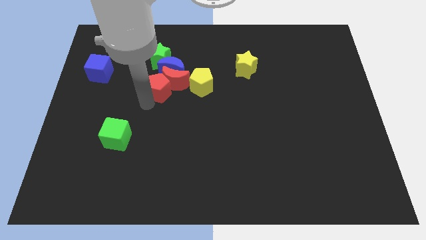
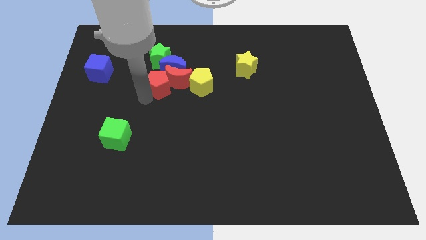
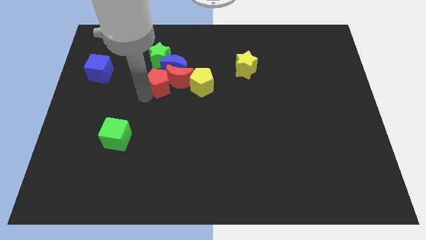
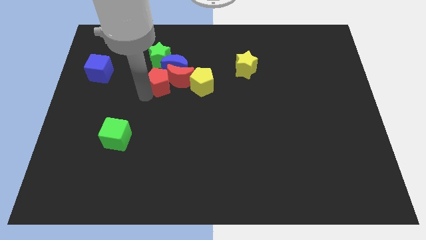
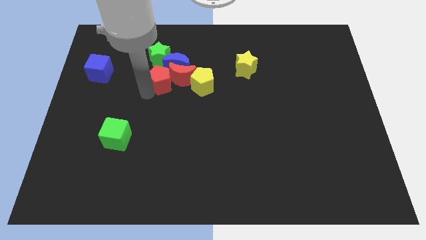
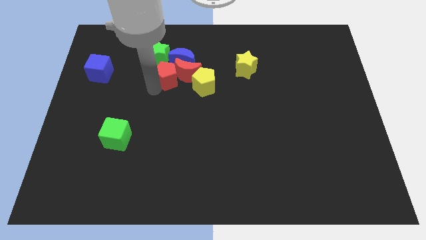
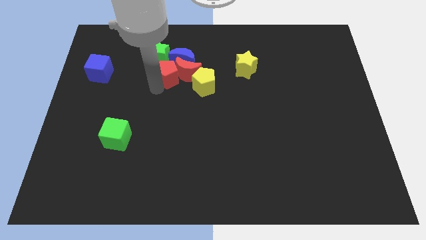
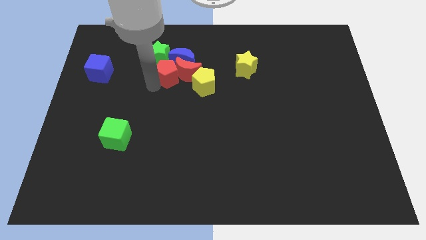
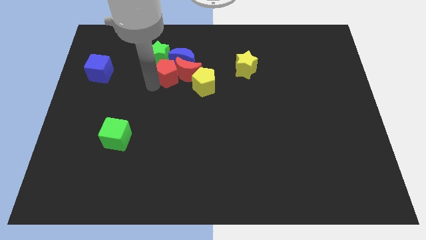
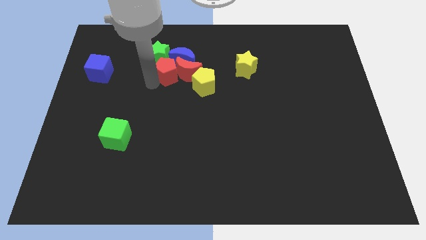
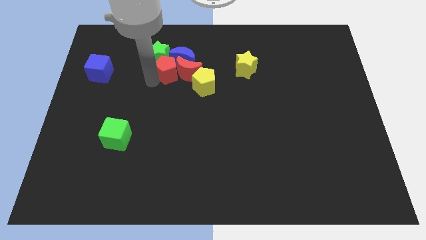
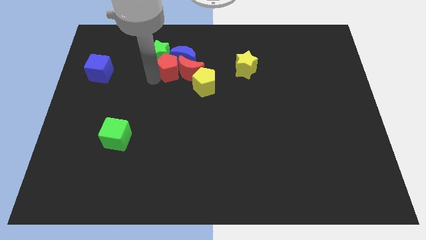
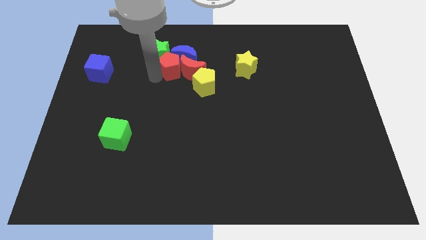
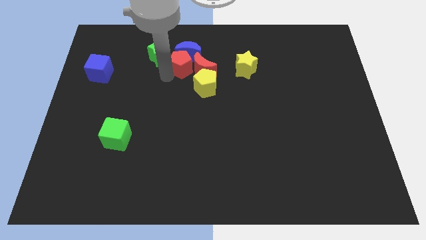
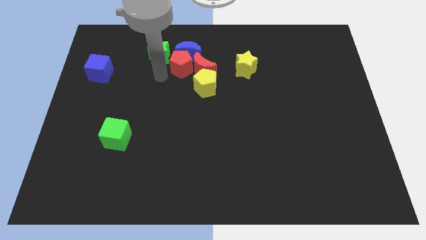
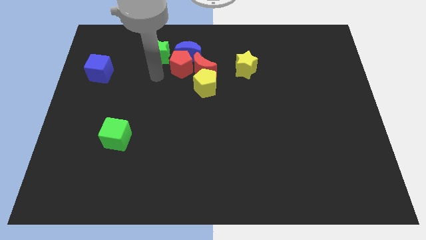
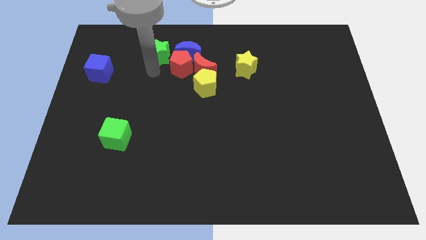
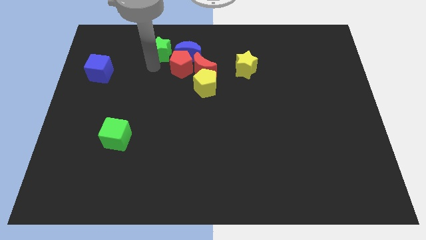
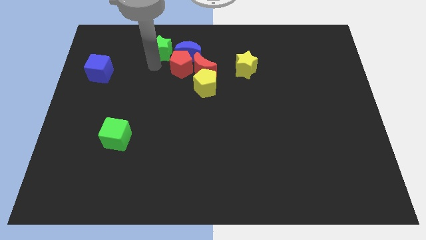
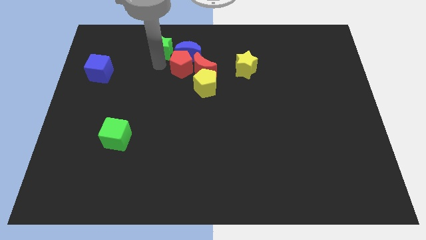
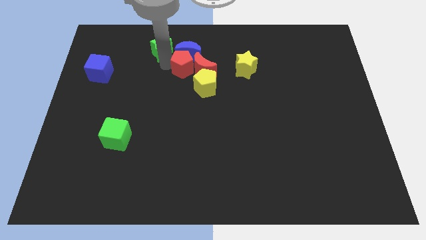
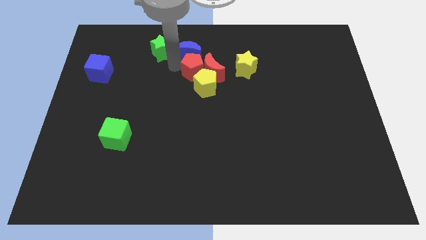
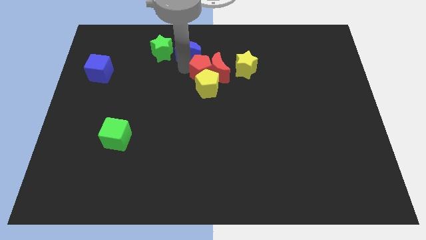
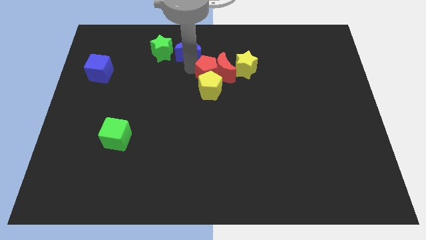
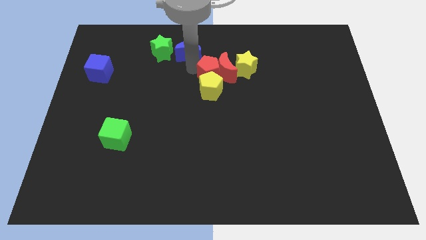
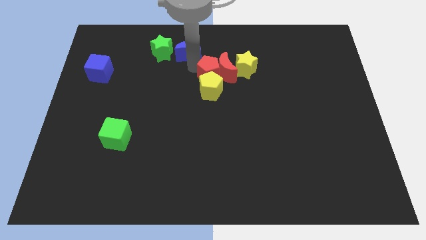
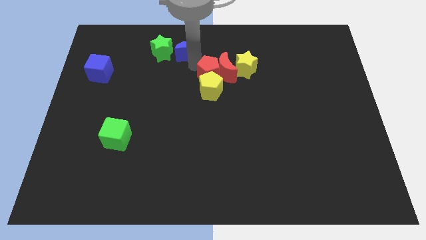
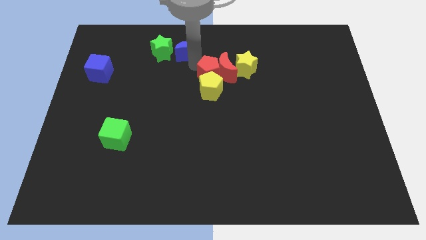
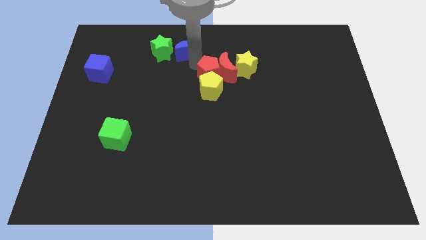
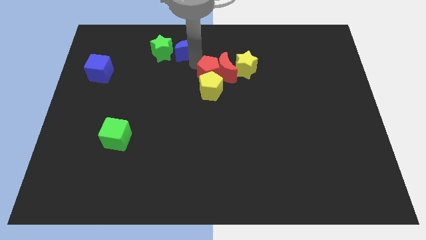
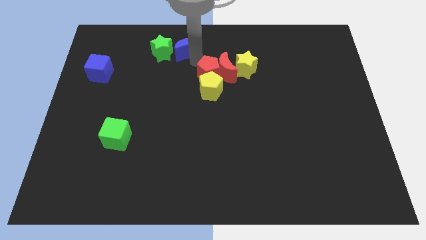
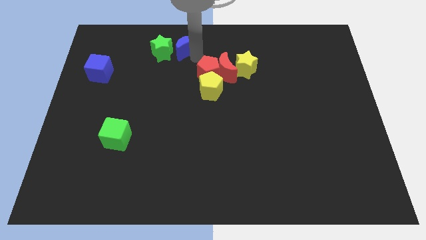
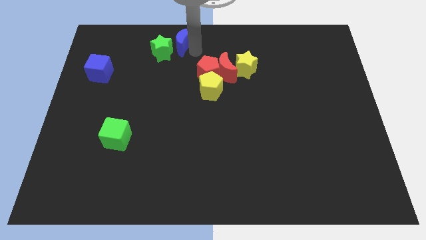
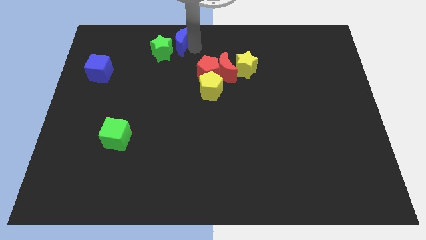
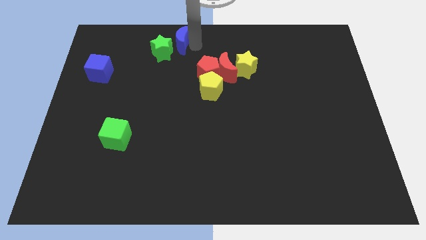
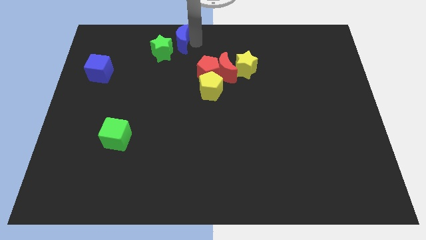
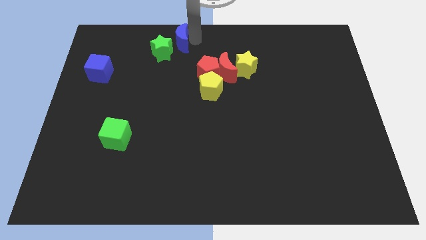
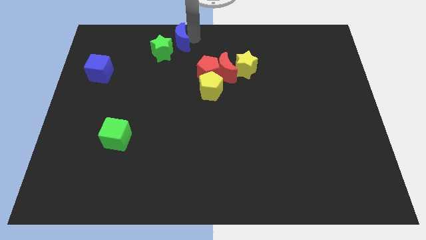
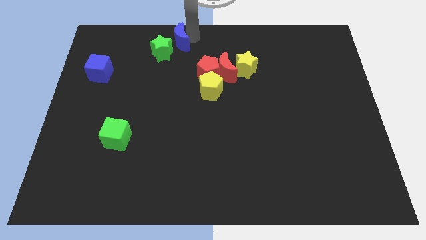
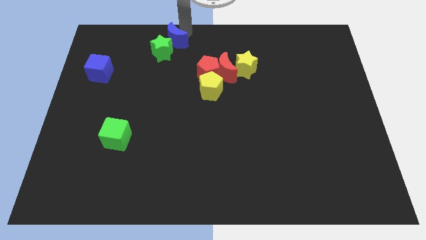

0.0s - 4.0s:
push the red pentagon into the red crescent

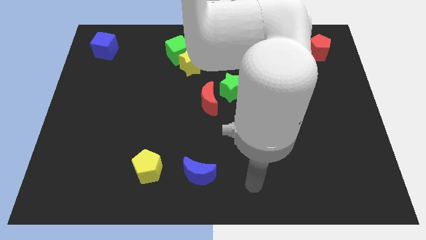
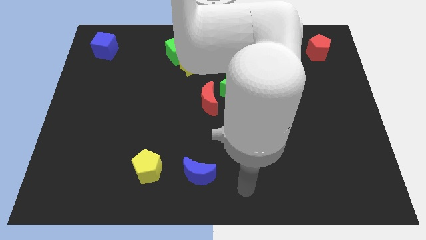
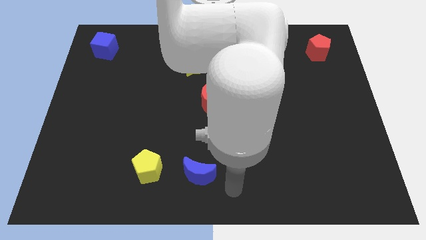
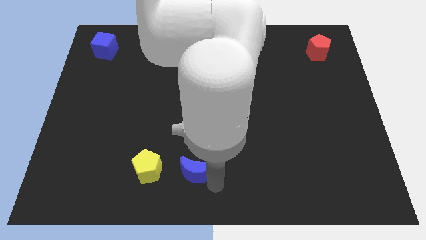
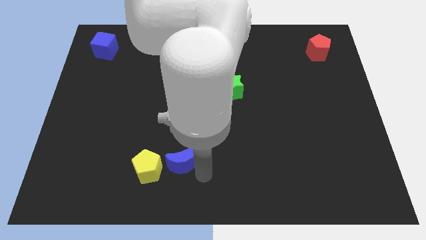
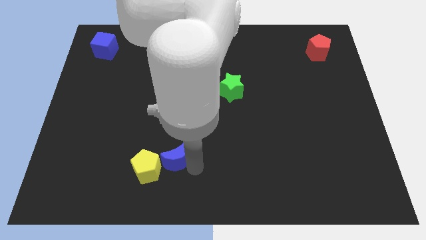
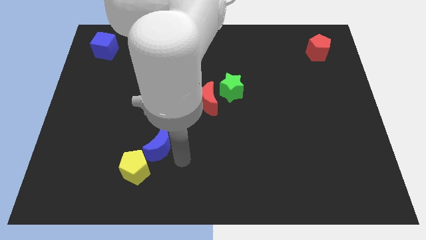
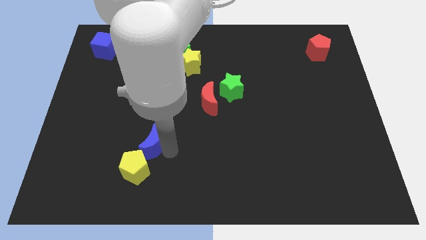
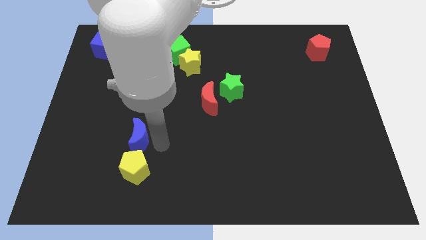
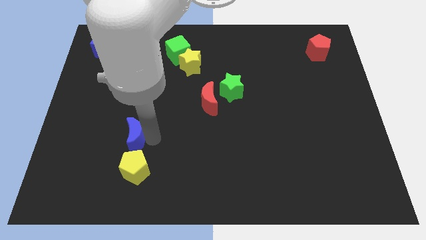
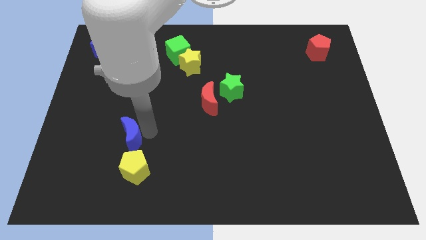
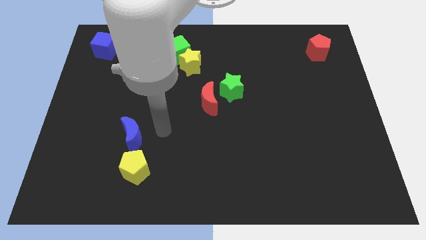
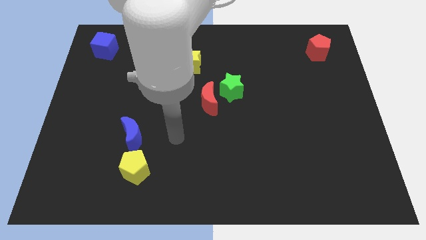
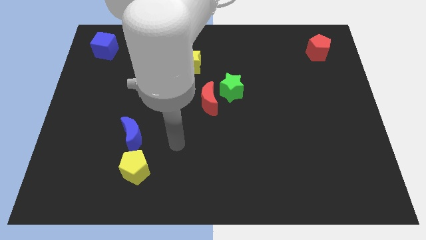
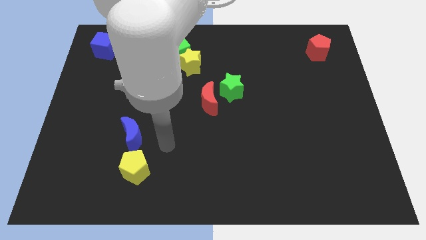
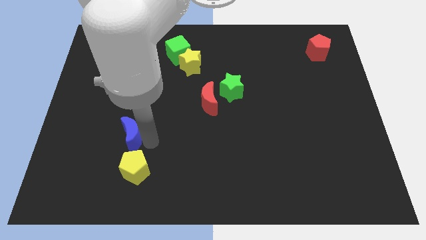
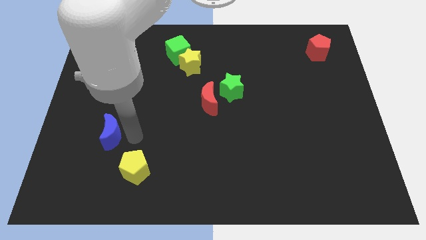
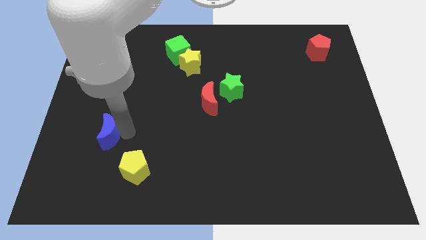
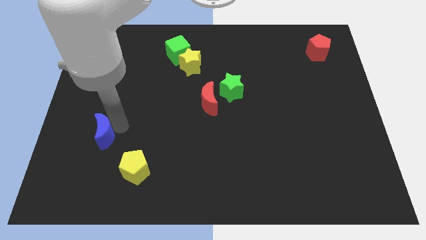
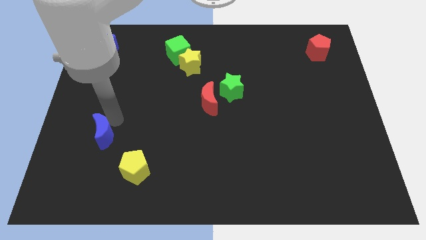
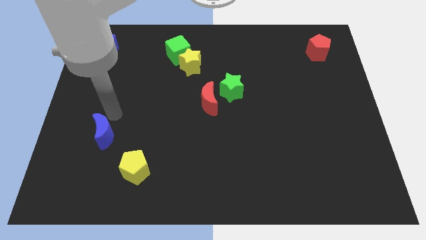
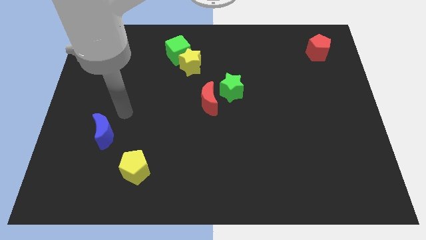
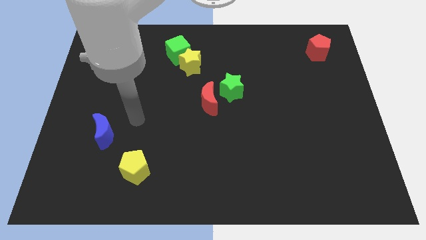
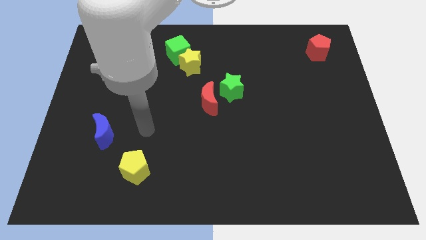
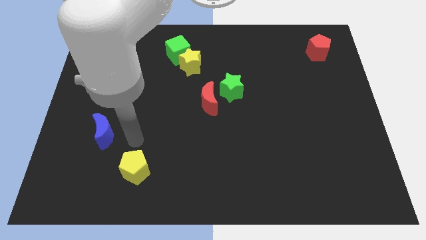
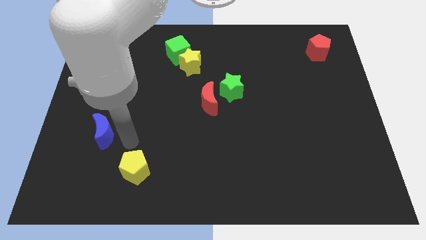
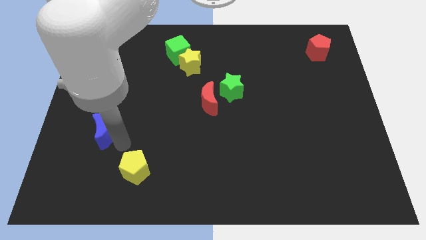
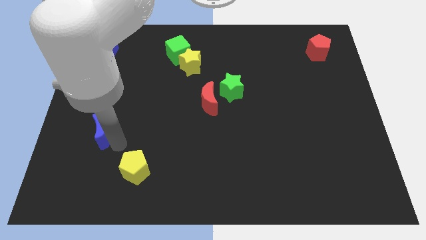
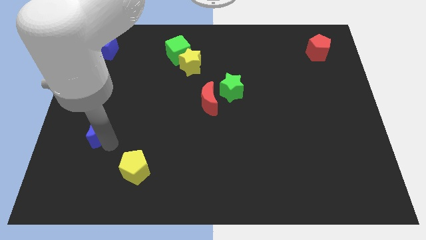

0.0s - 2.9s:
push the blue crescent to the top left of the yellow pentagon

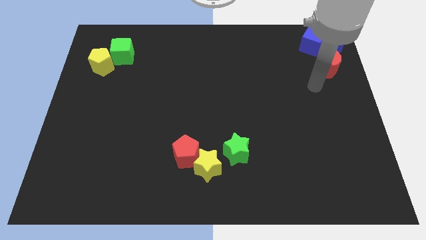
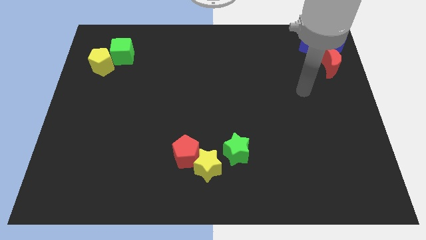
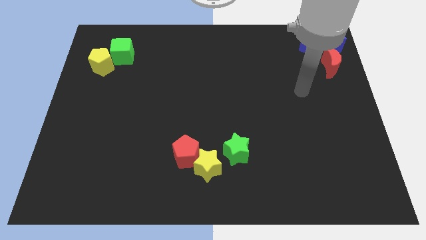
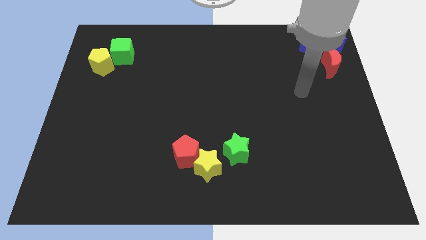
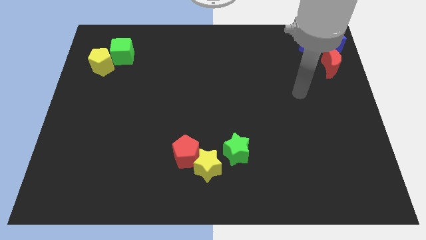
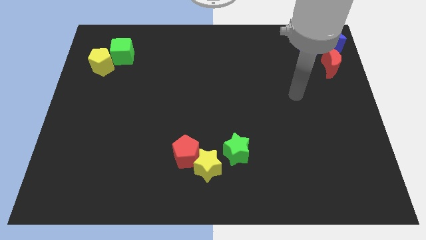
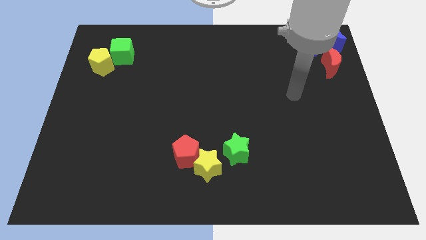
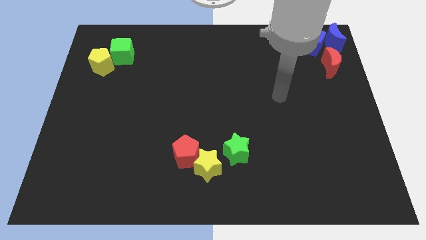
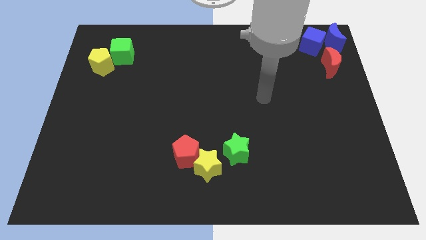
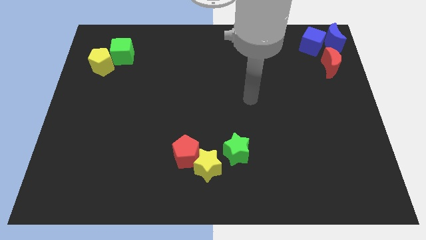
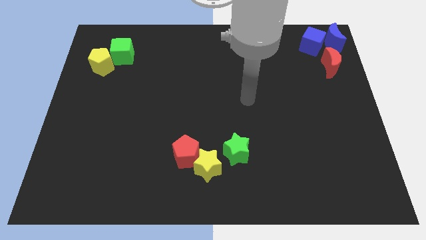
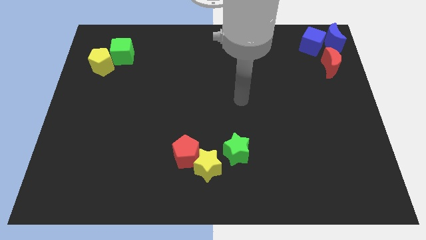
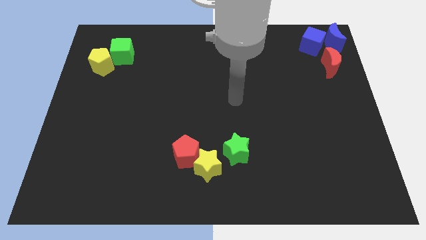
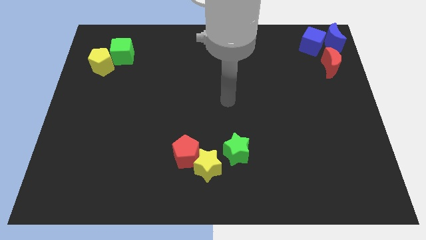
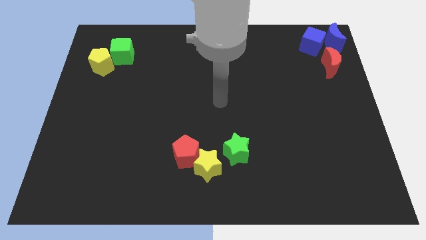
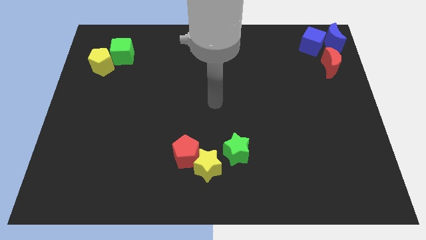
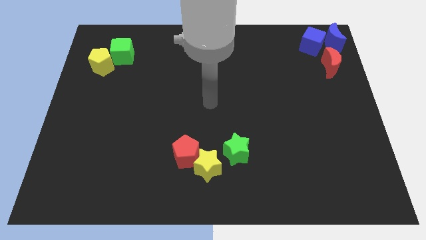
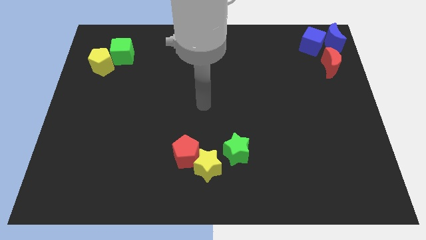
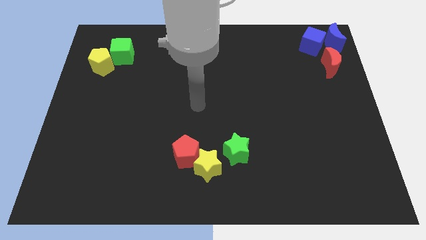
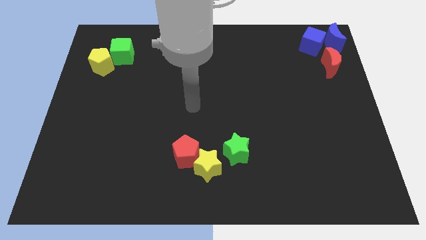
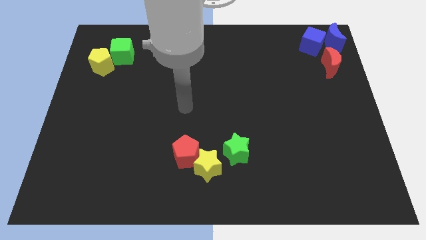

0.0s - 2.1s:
move your hand away from the red crescent
